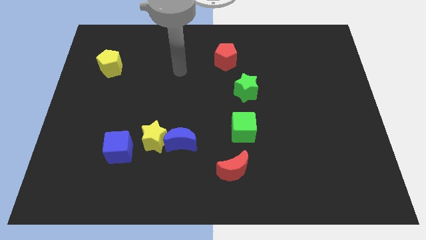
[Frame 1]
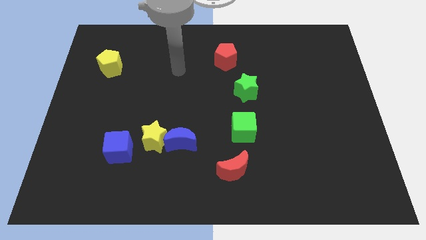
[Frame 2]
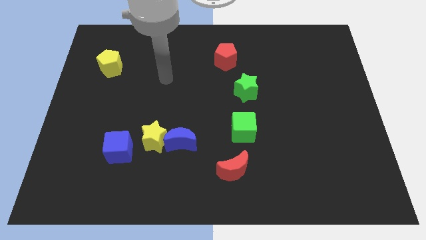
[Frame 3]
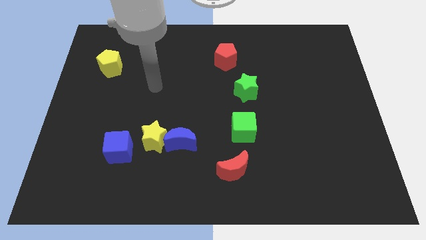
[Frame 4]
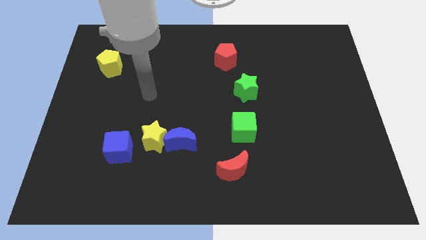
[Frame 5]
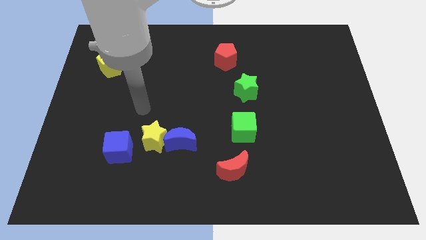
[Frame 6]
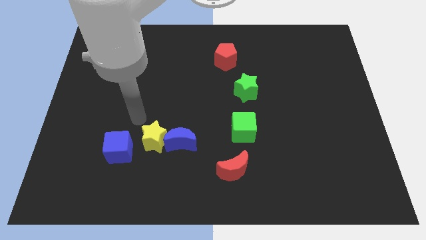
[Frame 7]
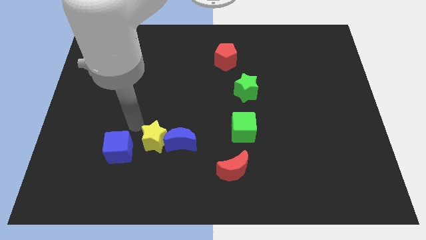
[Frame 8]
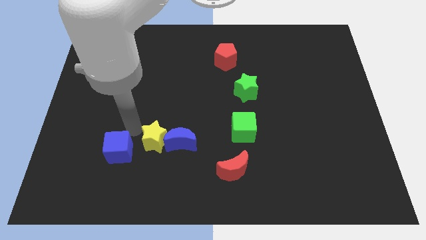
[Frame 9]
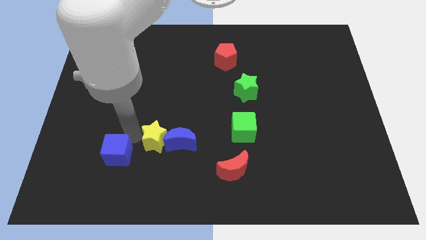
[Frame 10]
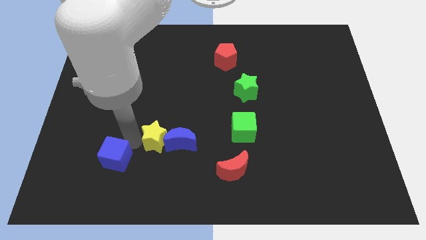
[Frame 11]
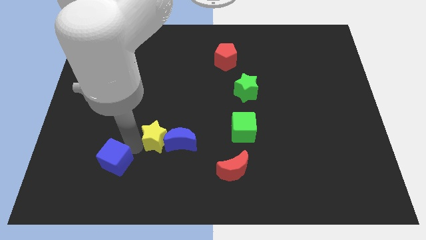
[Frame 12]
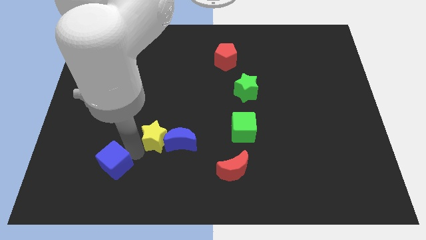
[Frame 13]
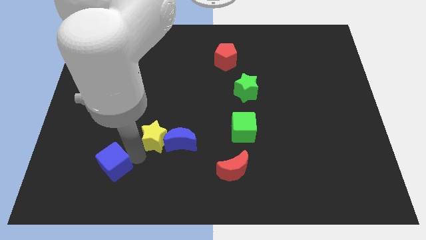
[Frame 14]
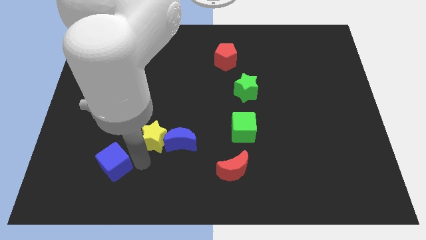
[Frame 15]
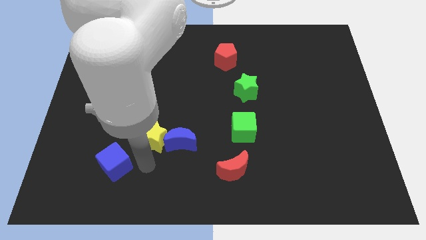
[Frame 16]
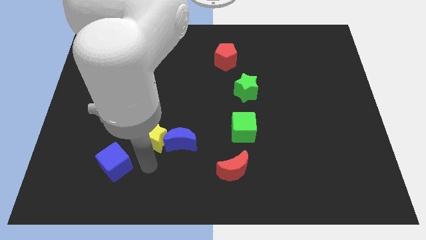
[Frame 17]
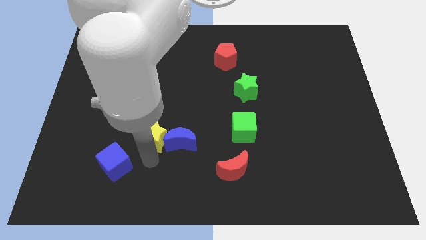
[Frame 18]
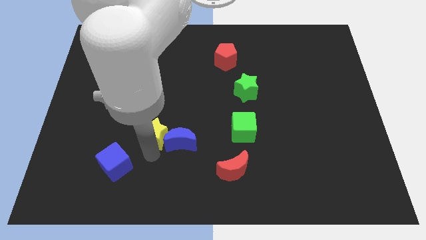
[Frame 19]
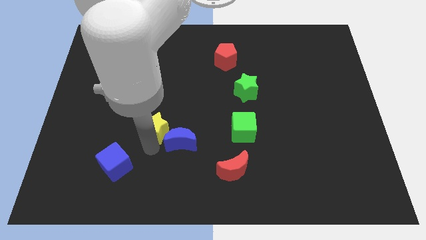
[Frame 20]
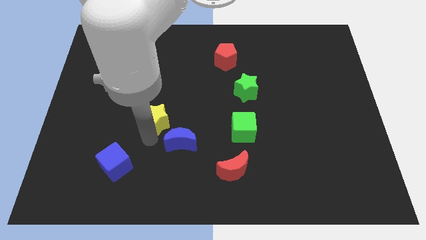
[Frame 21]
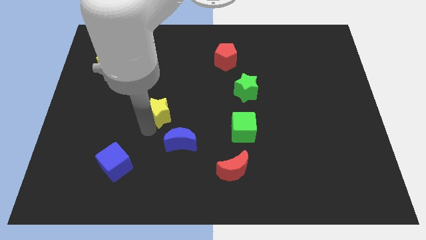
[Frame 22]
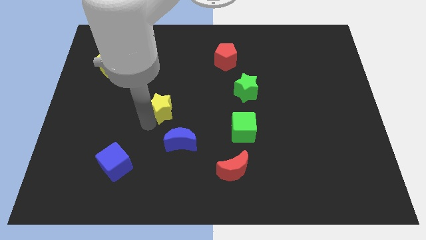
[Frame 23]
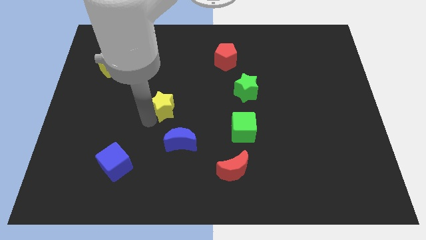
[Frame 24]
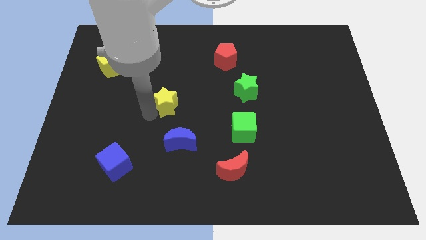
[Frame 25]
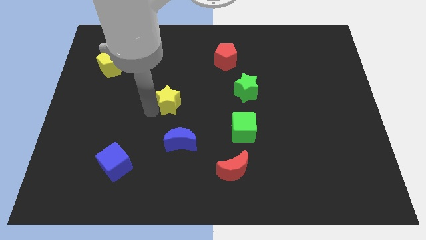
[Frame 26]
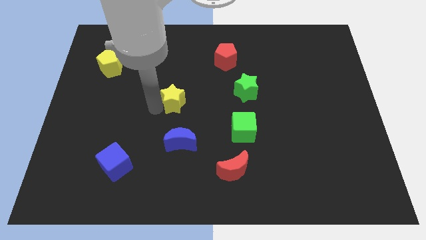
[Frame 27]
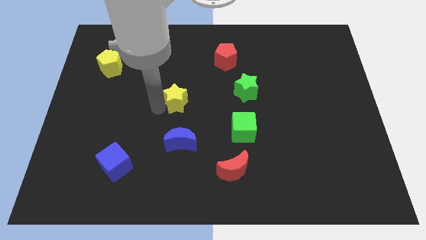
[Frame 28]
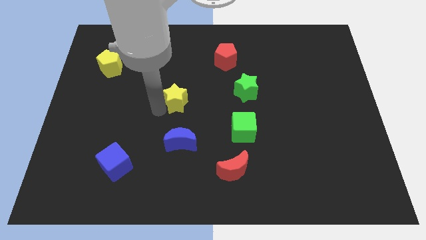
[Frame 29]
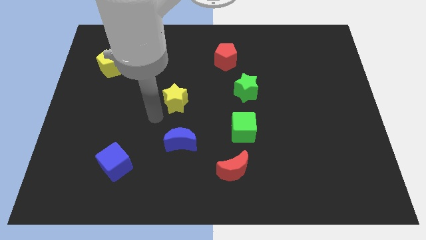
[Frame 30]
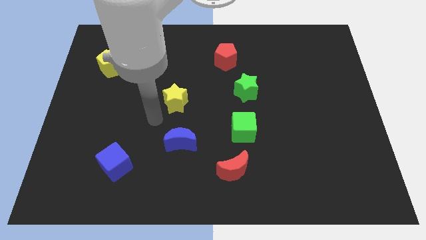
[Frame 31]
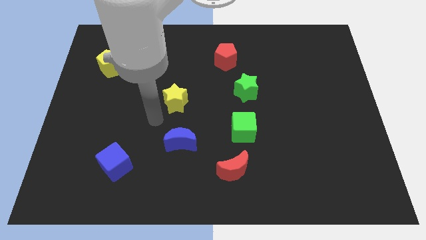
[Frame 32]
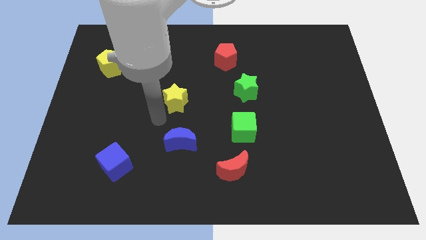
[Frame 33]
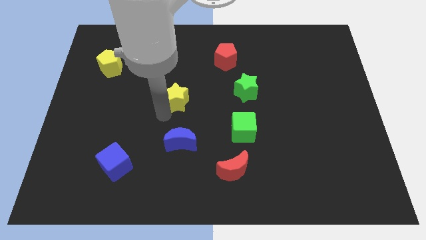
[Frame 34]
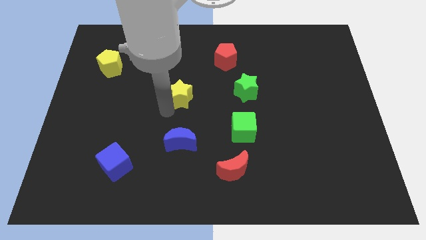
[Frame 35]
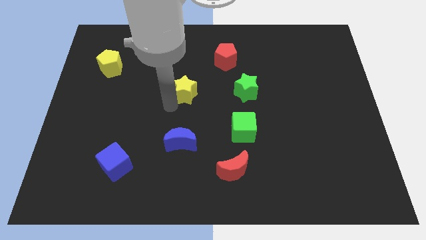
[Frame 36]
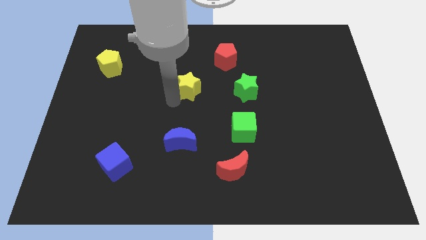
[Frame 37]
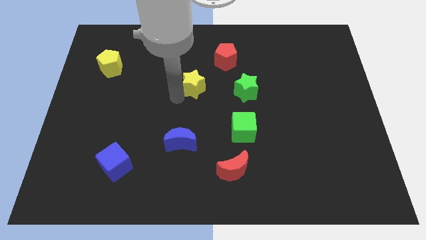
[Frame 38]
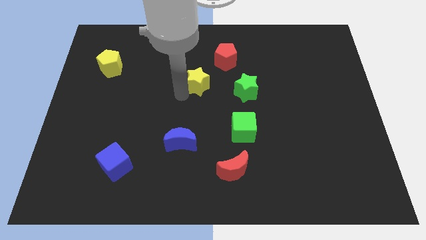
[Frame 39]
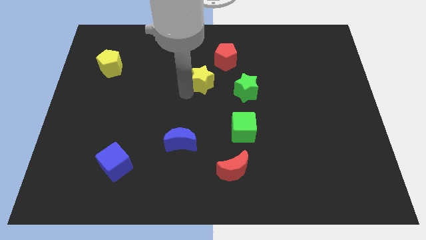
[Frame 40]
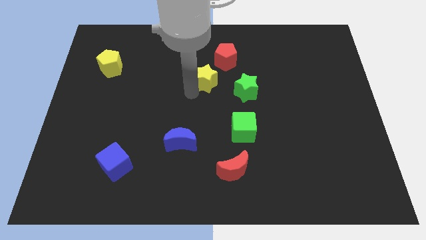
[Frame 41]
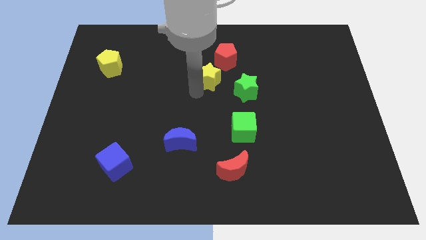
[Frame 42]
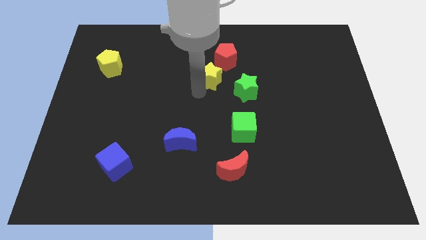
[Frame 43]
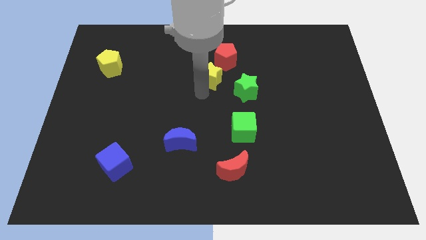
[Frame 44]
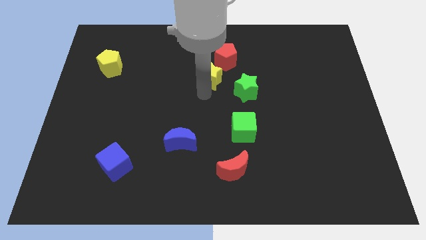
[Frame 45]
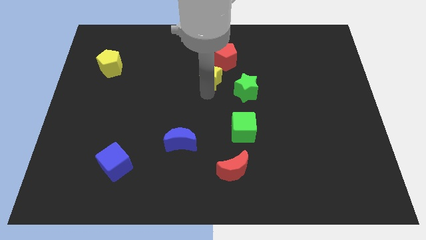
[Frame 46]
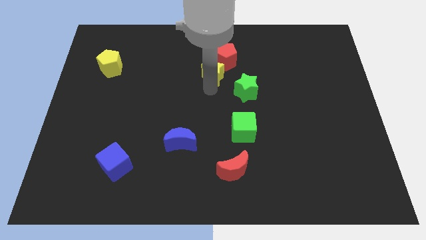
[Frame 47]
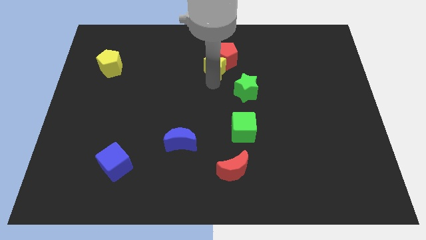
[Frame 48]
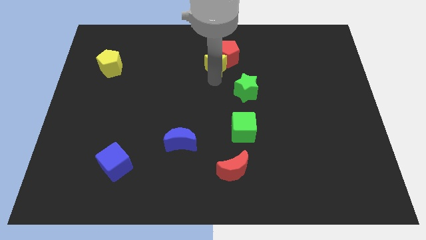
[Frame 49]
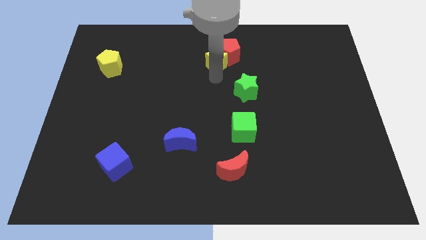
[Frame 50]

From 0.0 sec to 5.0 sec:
move the yellow star close to the red pentagon

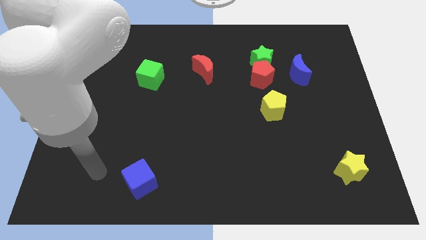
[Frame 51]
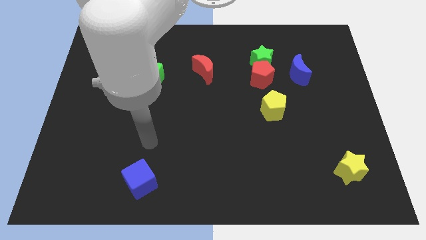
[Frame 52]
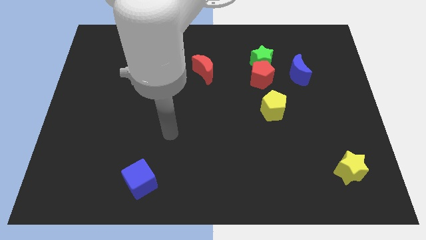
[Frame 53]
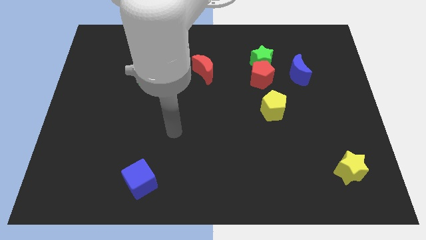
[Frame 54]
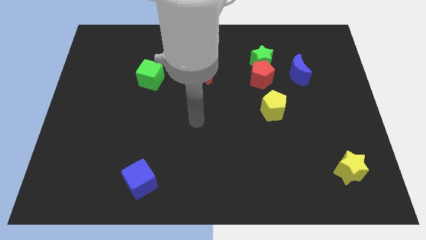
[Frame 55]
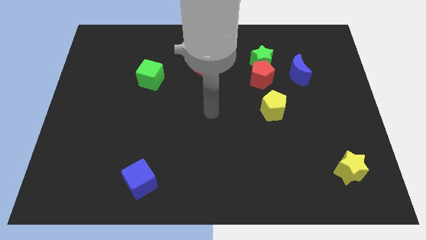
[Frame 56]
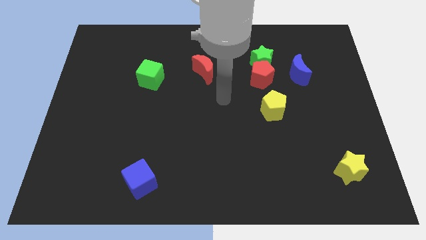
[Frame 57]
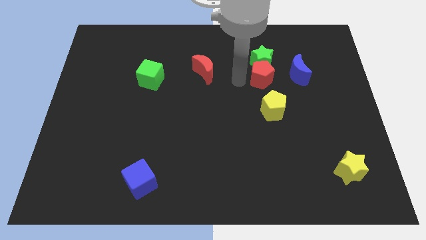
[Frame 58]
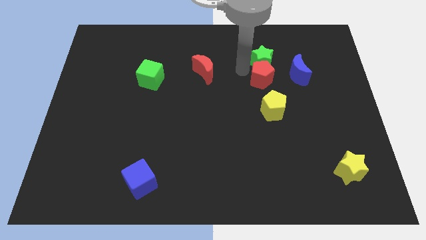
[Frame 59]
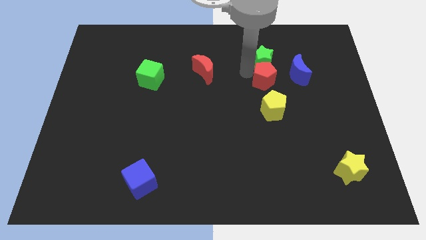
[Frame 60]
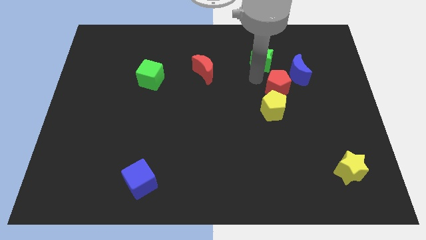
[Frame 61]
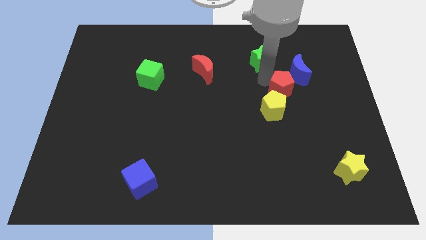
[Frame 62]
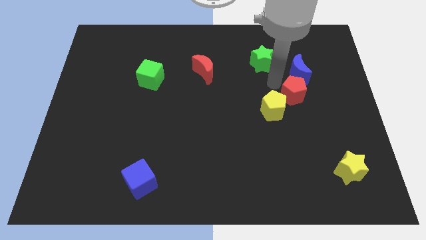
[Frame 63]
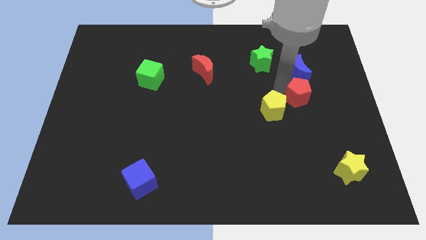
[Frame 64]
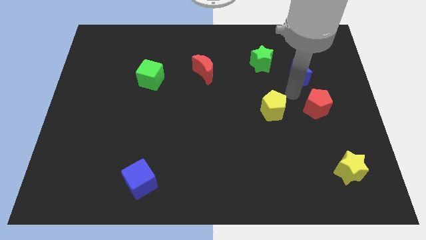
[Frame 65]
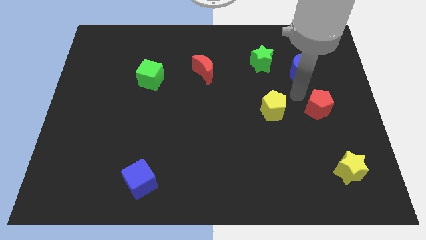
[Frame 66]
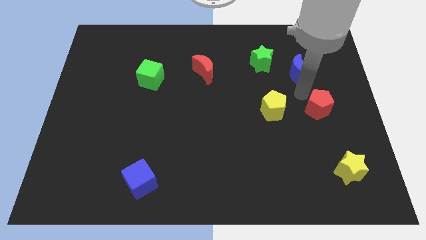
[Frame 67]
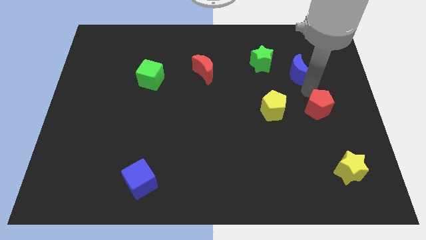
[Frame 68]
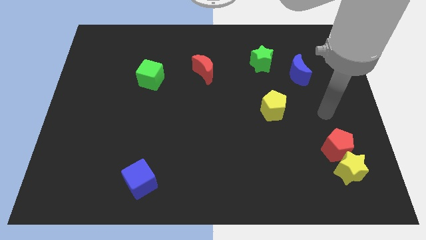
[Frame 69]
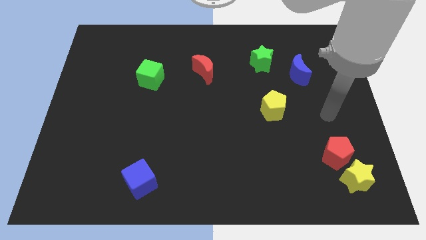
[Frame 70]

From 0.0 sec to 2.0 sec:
push the red pentagon next to the yellow star

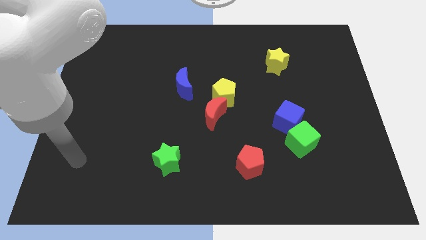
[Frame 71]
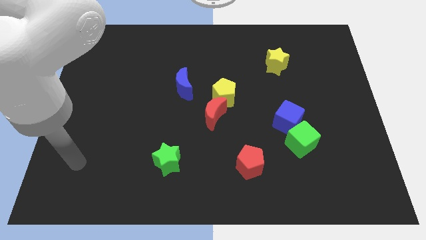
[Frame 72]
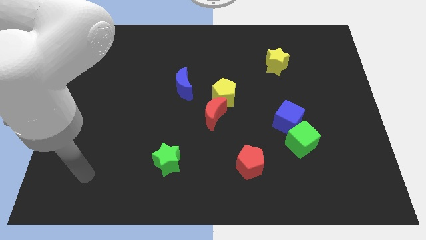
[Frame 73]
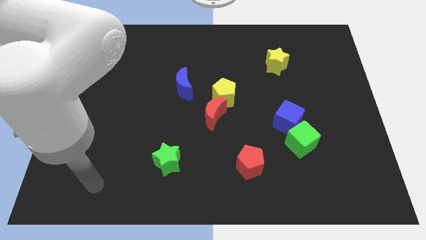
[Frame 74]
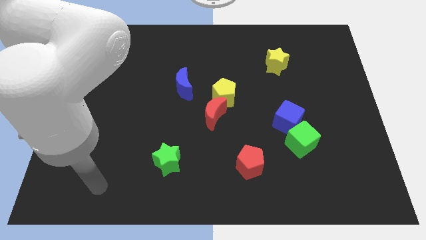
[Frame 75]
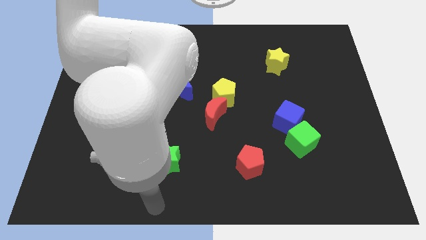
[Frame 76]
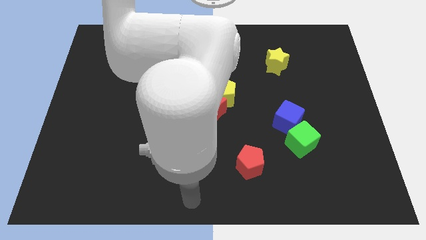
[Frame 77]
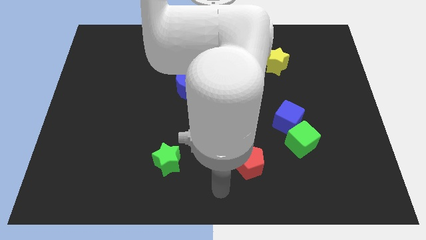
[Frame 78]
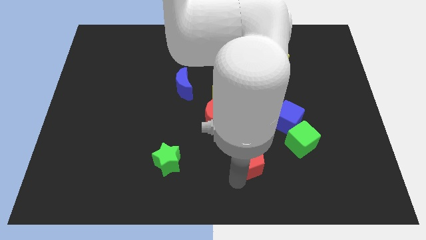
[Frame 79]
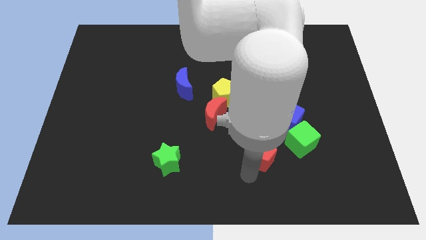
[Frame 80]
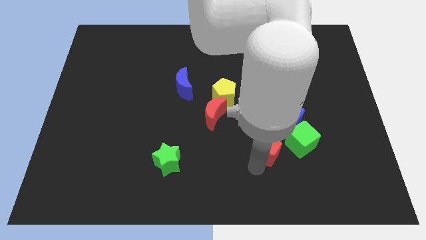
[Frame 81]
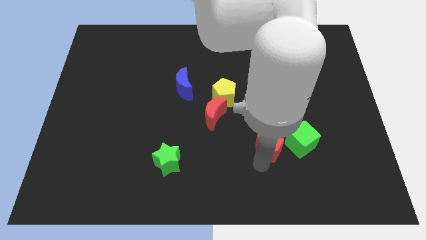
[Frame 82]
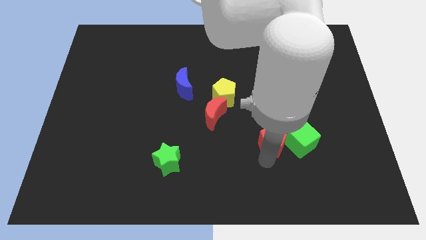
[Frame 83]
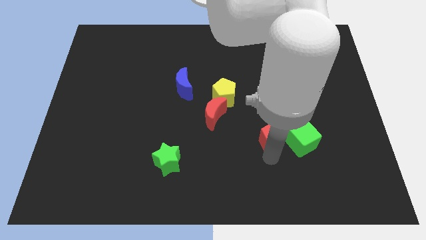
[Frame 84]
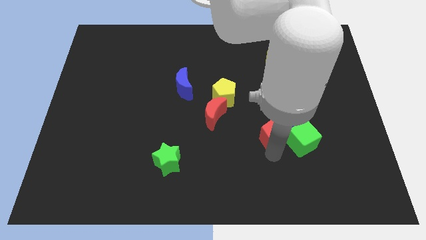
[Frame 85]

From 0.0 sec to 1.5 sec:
slide the red pentagon to the green cube

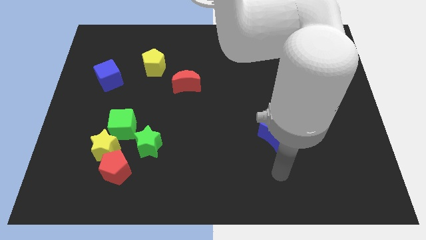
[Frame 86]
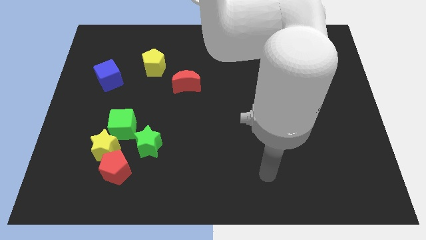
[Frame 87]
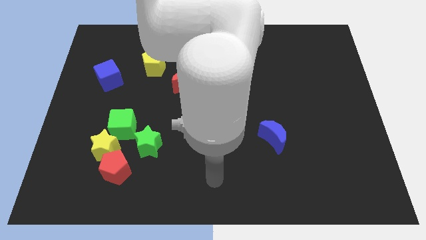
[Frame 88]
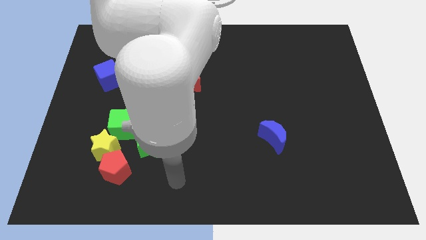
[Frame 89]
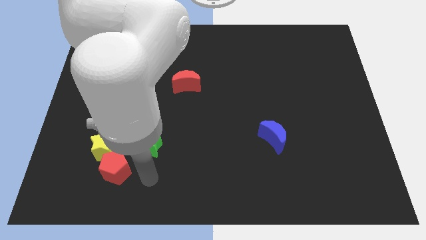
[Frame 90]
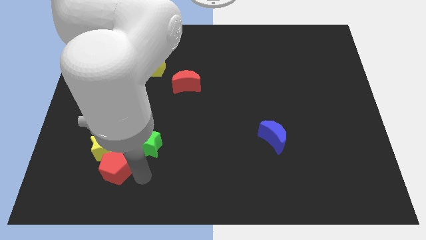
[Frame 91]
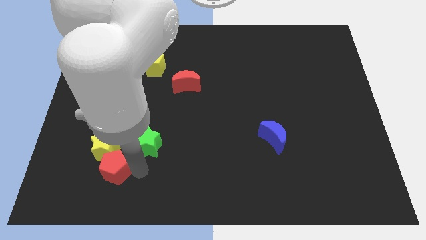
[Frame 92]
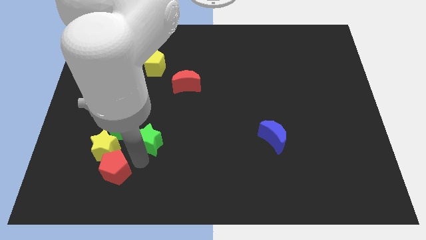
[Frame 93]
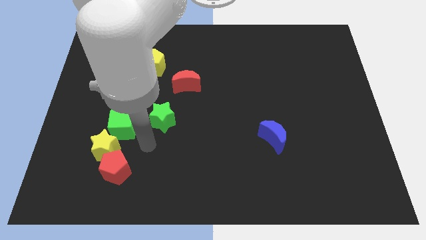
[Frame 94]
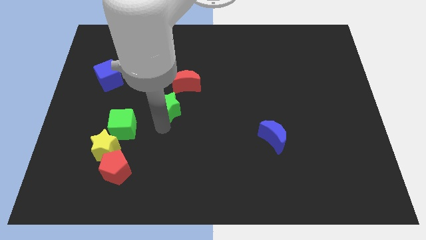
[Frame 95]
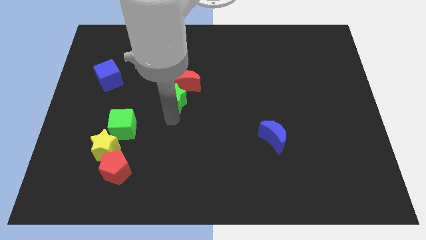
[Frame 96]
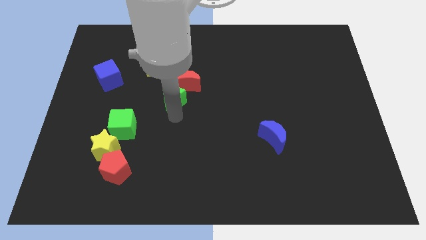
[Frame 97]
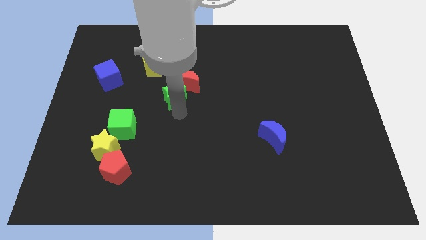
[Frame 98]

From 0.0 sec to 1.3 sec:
slide the green star to the red moon
